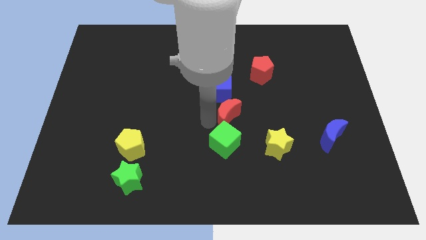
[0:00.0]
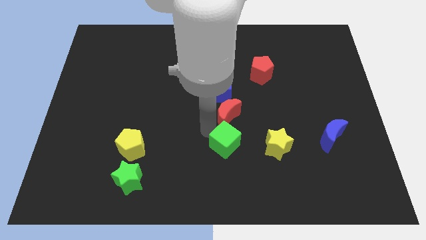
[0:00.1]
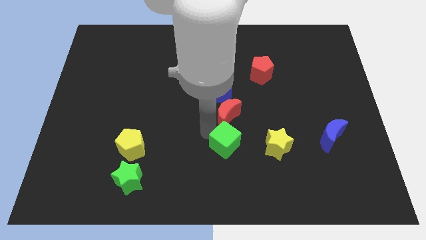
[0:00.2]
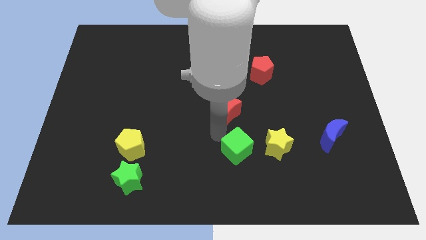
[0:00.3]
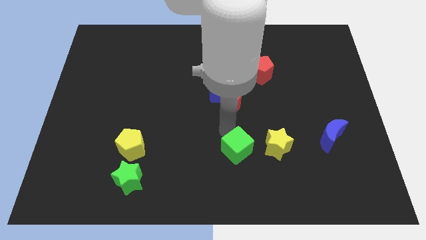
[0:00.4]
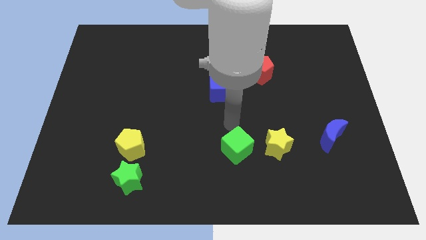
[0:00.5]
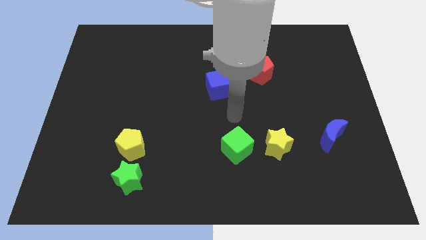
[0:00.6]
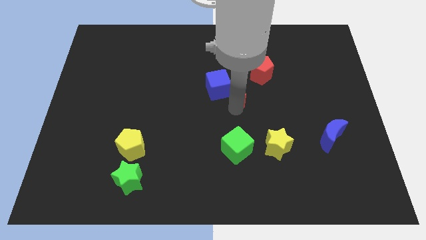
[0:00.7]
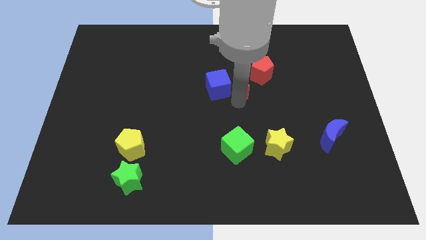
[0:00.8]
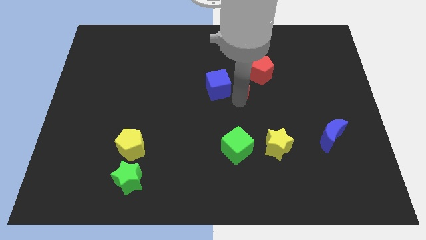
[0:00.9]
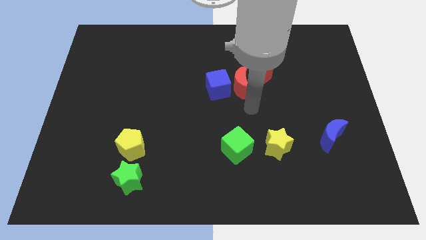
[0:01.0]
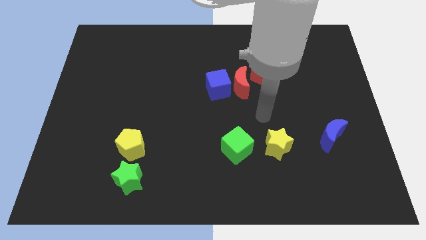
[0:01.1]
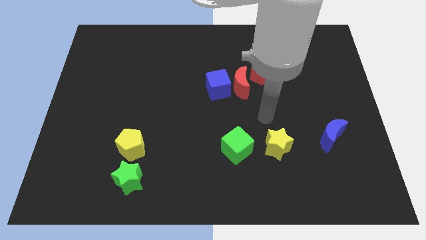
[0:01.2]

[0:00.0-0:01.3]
separate red crescent and the green cube

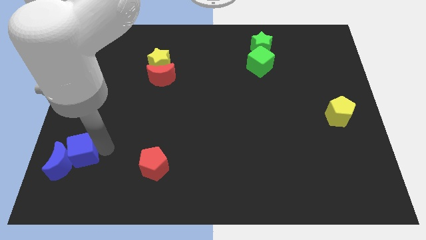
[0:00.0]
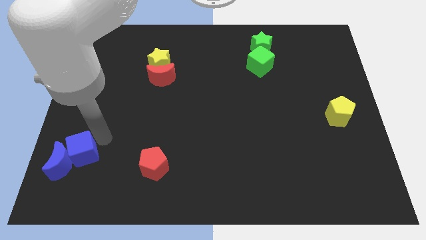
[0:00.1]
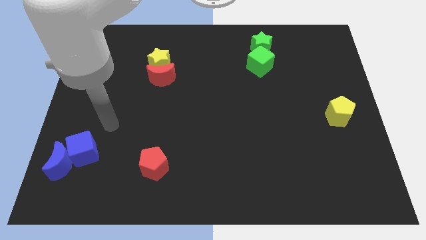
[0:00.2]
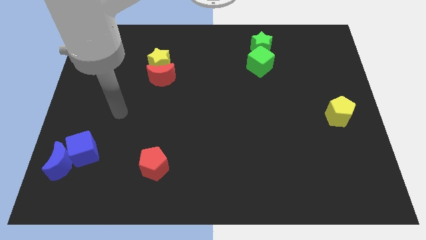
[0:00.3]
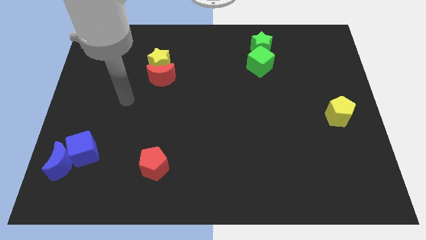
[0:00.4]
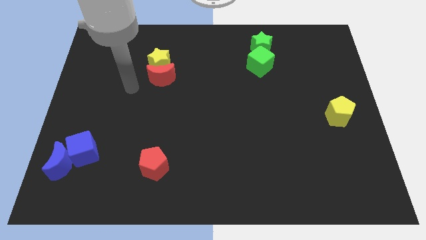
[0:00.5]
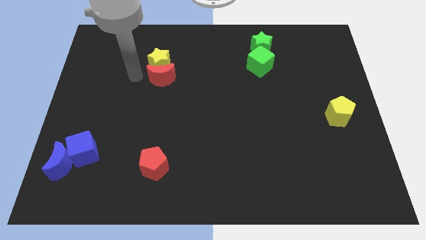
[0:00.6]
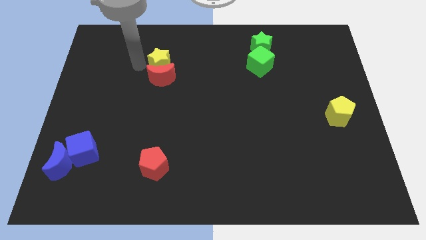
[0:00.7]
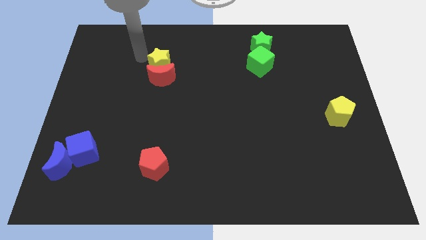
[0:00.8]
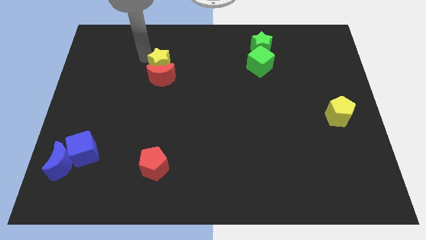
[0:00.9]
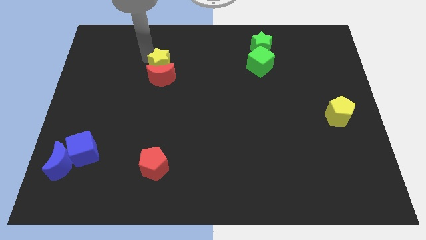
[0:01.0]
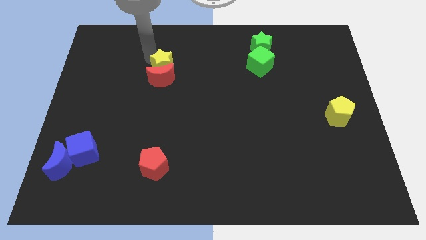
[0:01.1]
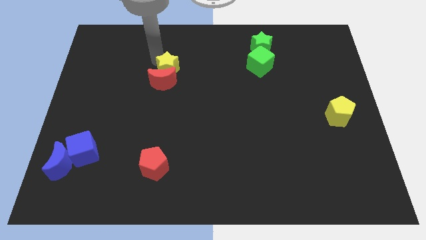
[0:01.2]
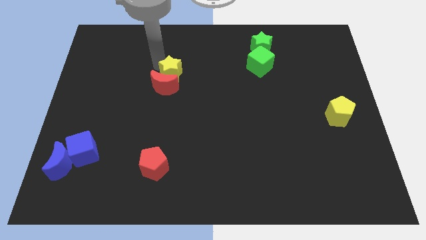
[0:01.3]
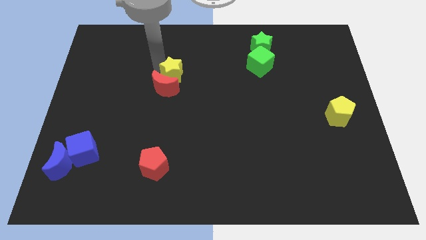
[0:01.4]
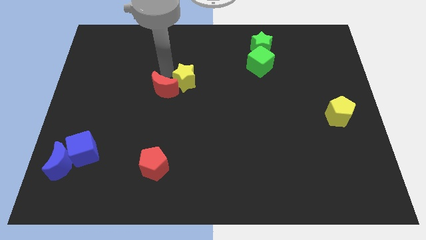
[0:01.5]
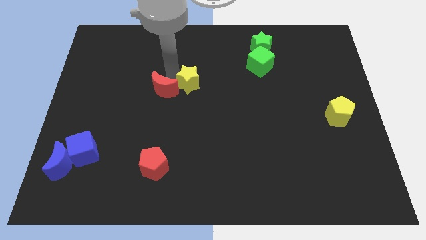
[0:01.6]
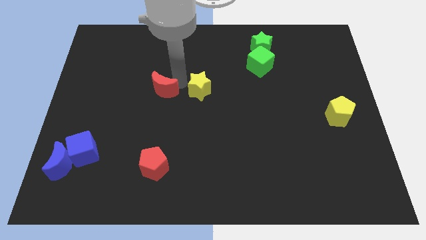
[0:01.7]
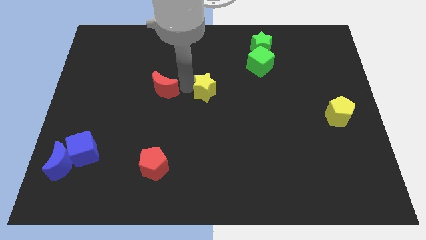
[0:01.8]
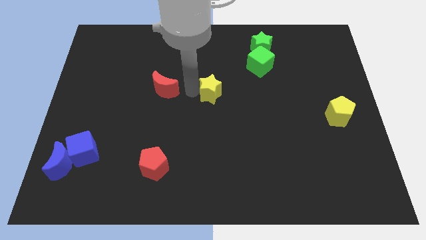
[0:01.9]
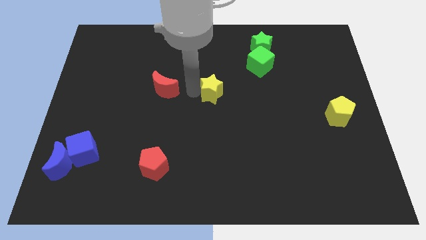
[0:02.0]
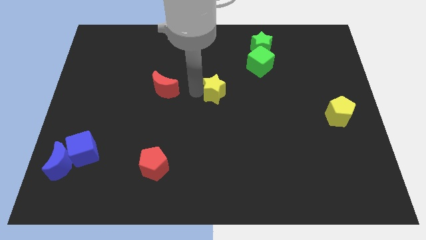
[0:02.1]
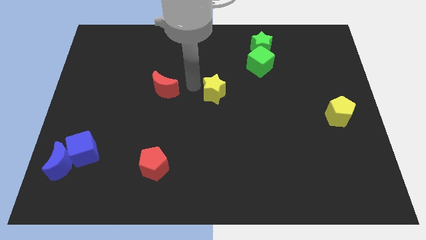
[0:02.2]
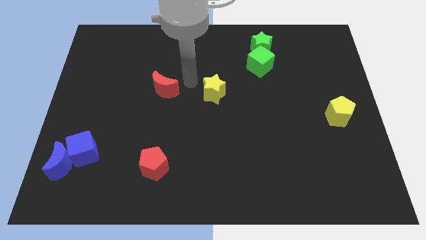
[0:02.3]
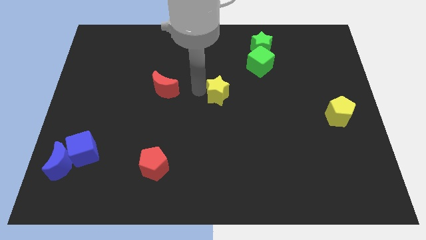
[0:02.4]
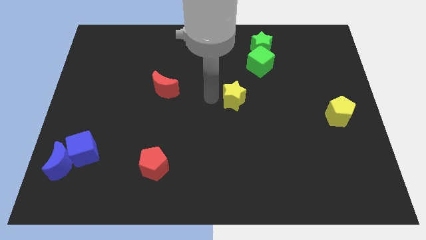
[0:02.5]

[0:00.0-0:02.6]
place the yellow star in between the green cube and red pentagon

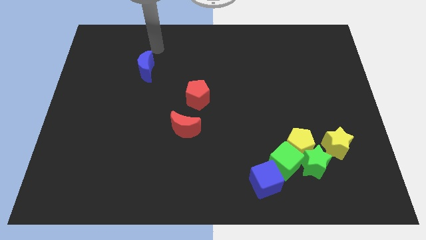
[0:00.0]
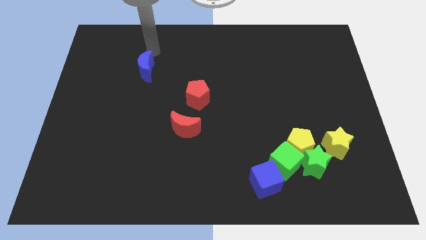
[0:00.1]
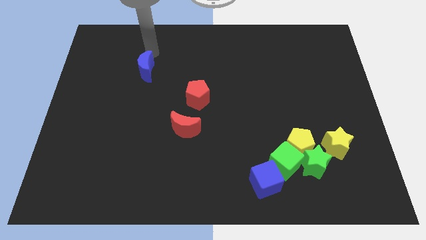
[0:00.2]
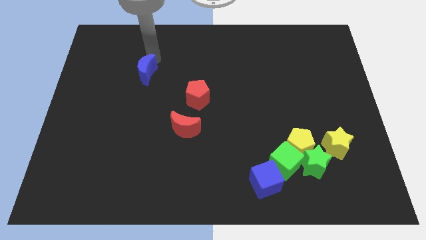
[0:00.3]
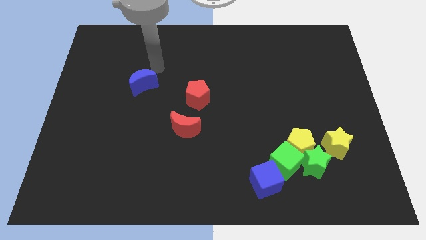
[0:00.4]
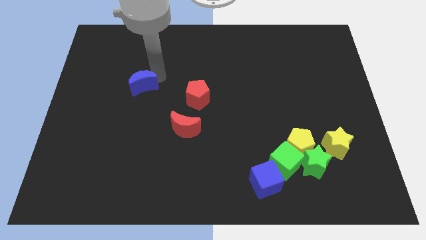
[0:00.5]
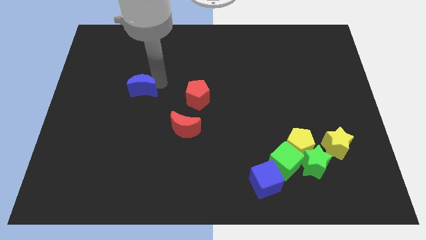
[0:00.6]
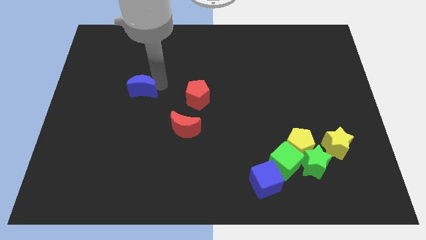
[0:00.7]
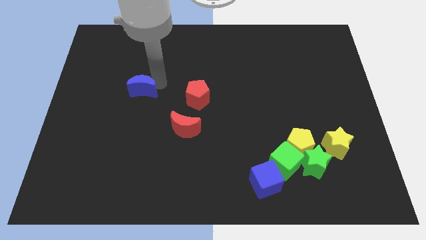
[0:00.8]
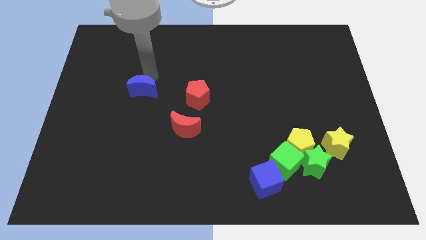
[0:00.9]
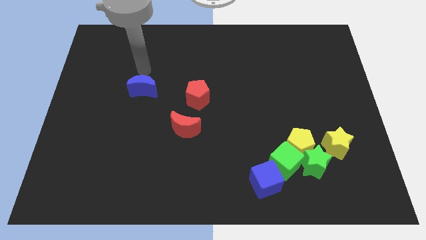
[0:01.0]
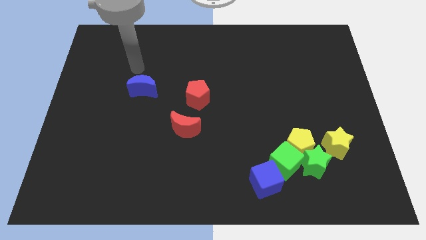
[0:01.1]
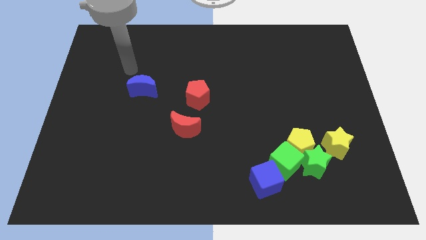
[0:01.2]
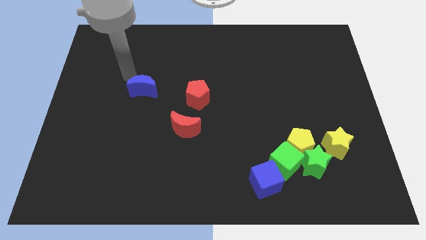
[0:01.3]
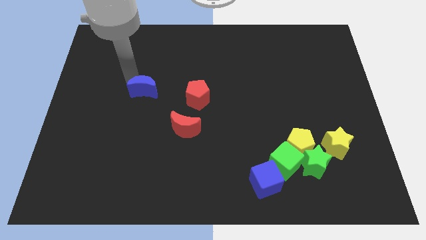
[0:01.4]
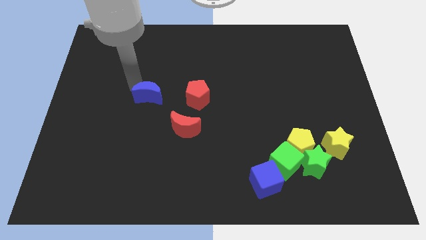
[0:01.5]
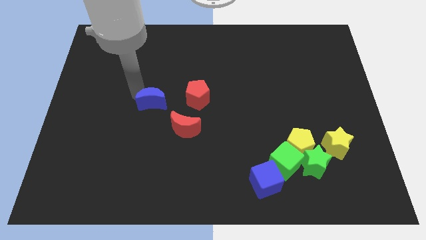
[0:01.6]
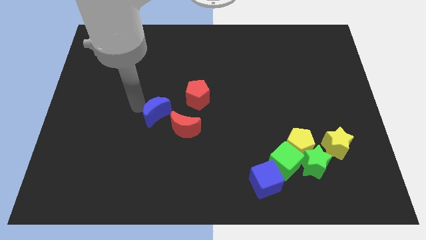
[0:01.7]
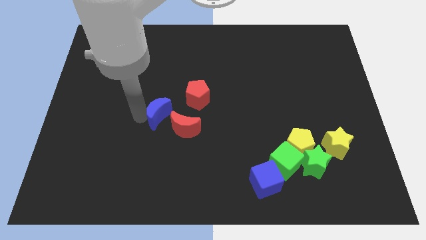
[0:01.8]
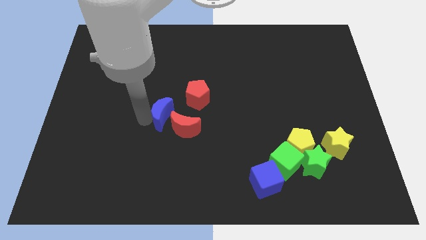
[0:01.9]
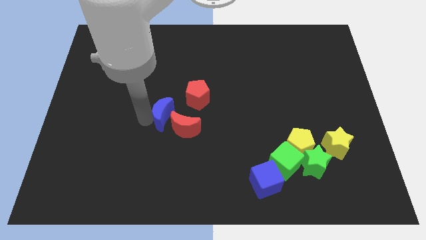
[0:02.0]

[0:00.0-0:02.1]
move the blue crescent close to the left side of the red moon

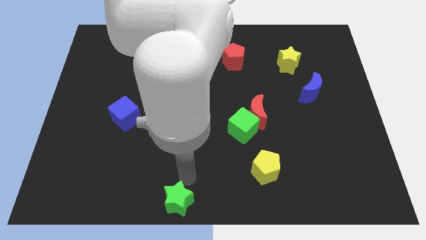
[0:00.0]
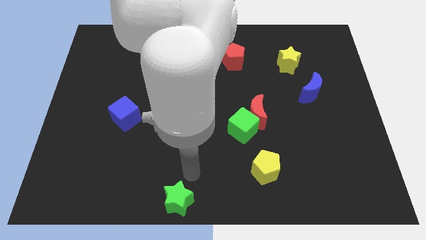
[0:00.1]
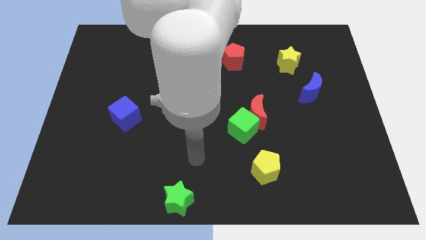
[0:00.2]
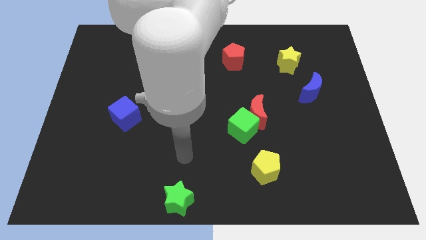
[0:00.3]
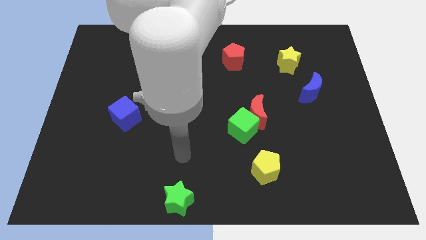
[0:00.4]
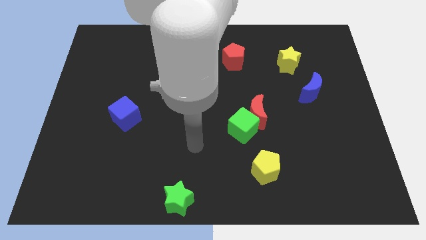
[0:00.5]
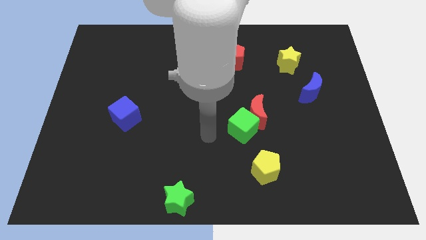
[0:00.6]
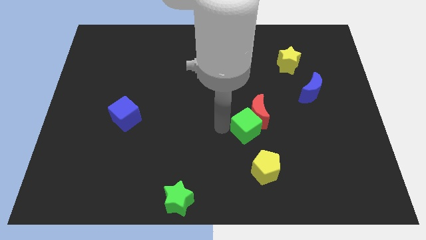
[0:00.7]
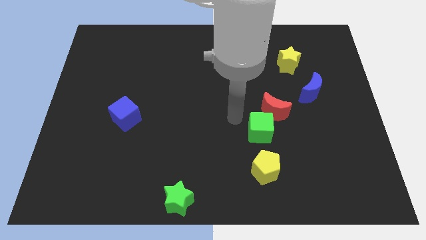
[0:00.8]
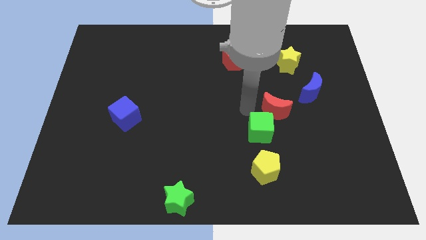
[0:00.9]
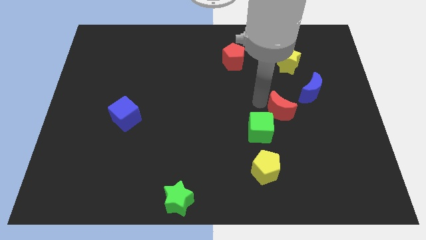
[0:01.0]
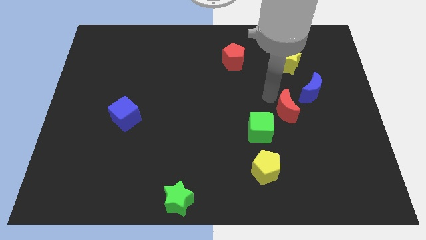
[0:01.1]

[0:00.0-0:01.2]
move the red crescent to the top right of the green cube

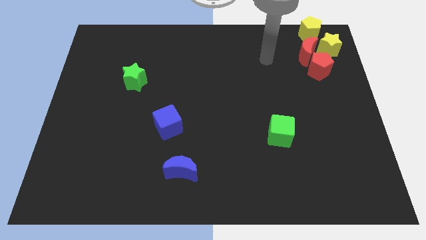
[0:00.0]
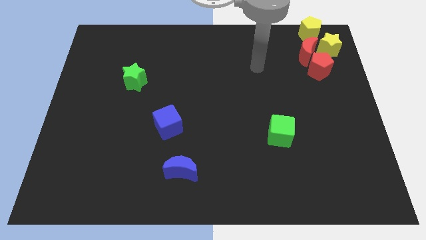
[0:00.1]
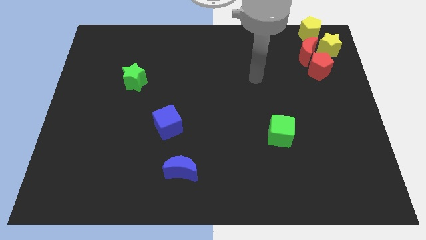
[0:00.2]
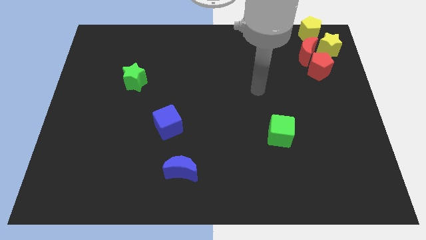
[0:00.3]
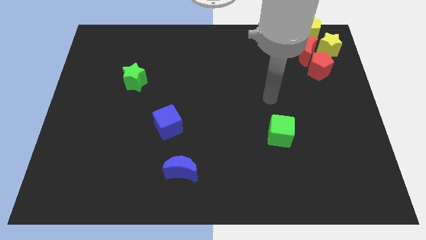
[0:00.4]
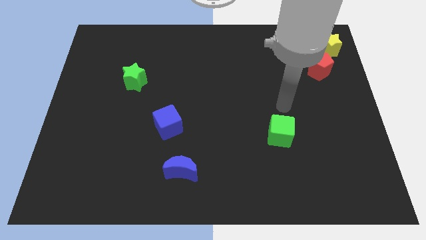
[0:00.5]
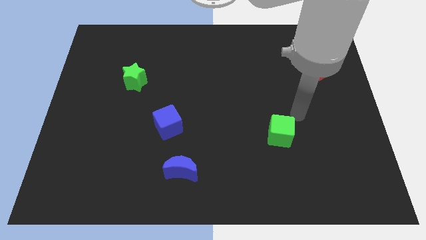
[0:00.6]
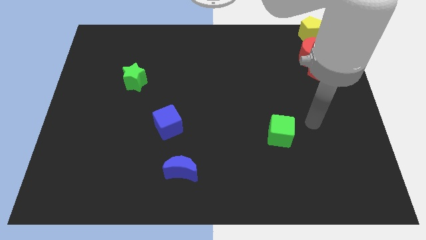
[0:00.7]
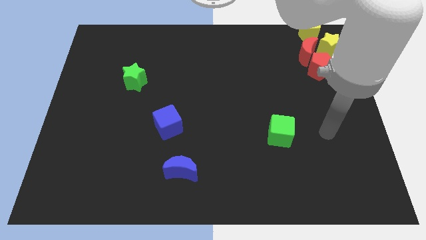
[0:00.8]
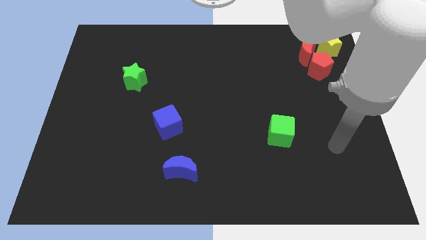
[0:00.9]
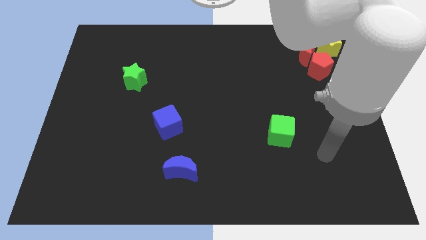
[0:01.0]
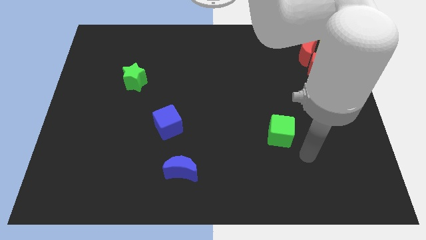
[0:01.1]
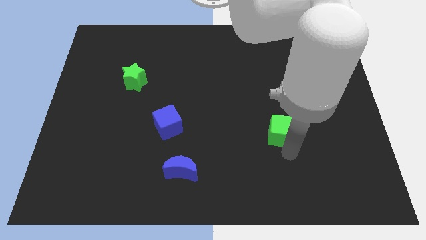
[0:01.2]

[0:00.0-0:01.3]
go and point your hand at the right side of the green cube

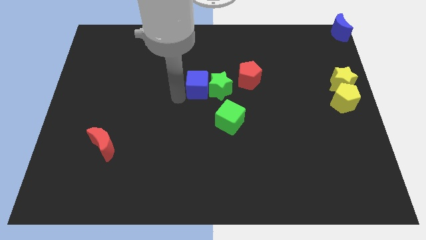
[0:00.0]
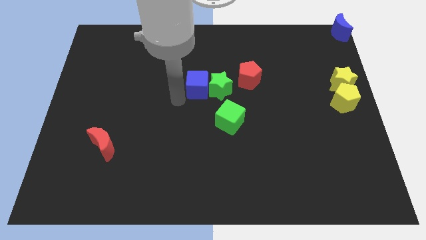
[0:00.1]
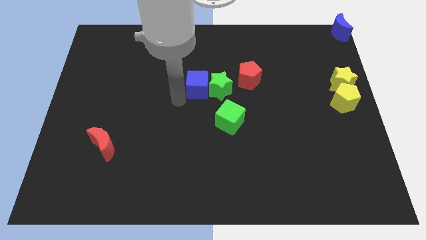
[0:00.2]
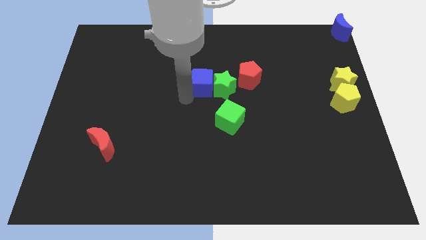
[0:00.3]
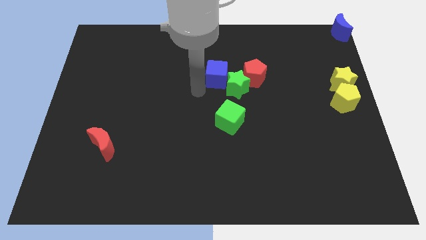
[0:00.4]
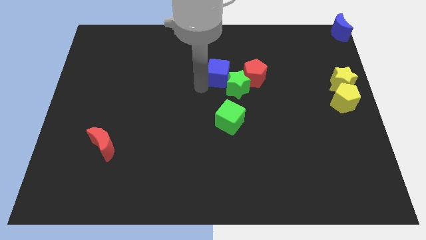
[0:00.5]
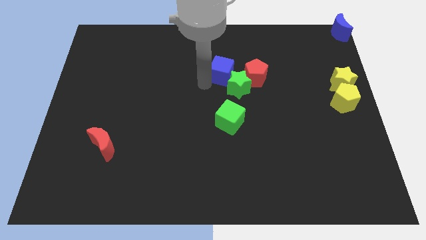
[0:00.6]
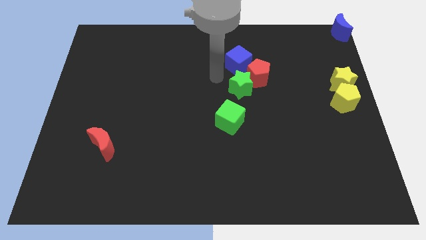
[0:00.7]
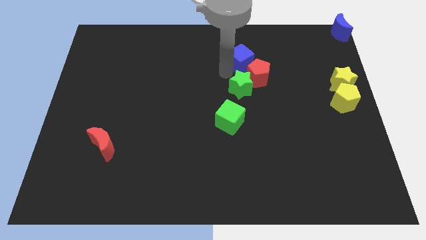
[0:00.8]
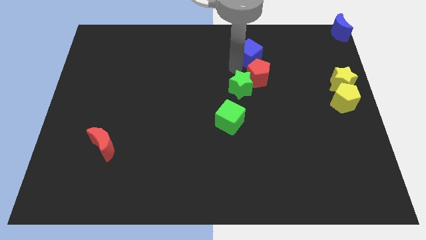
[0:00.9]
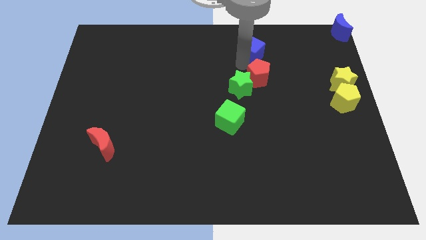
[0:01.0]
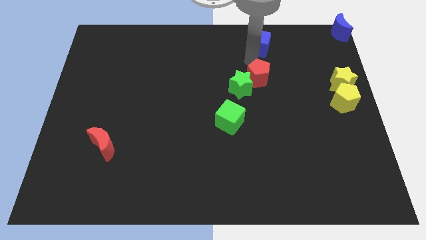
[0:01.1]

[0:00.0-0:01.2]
push blue cube above red pentagon
